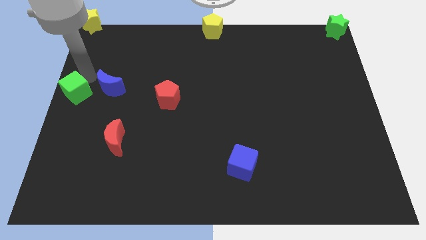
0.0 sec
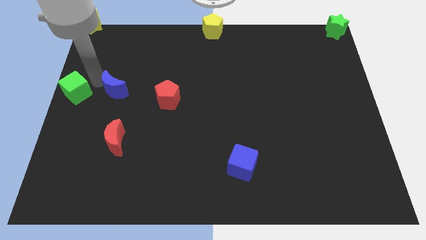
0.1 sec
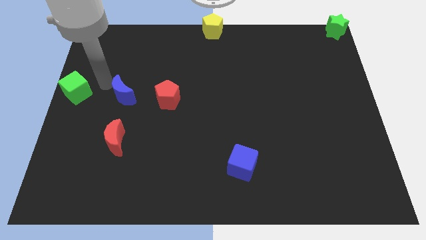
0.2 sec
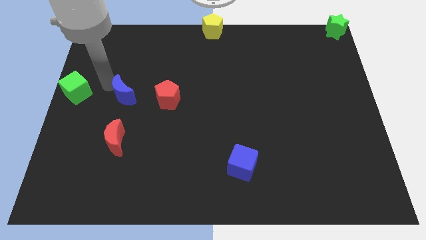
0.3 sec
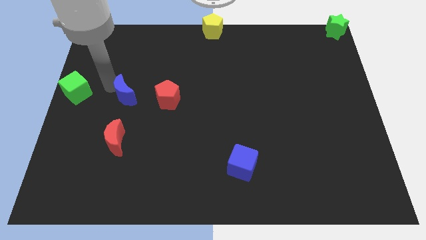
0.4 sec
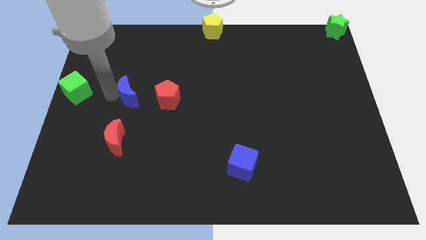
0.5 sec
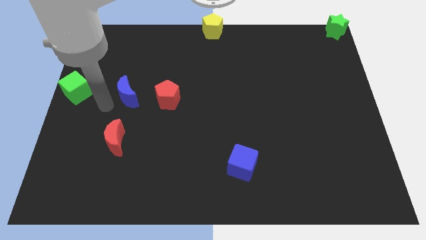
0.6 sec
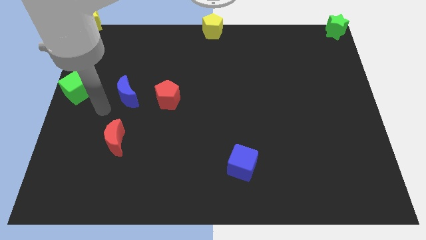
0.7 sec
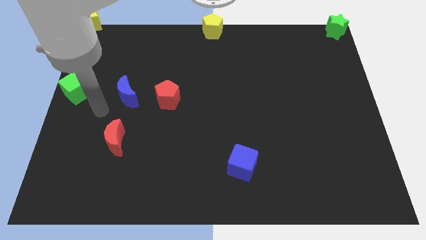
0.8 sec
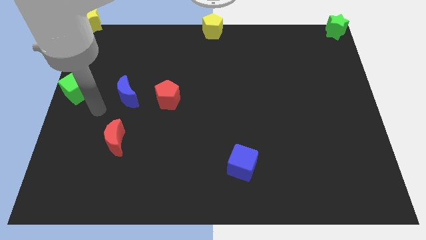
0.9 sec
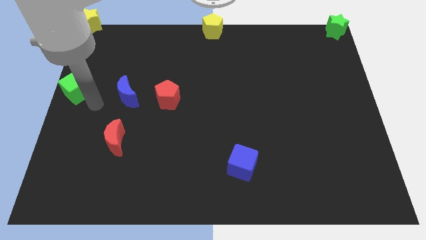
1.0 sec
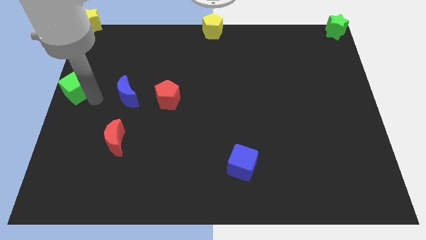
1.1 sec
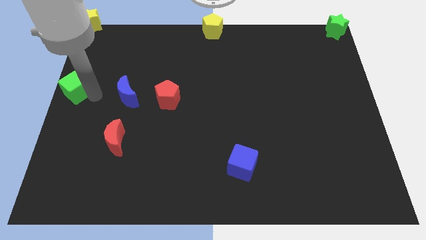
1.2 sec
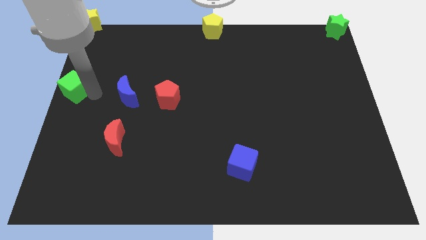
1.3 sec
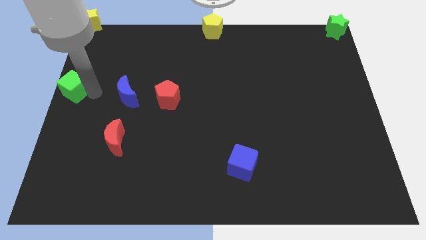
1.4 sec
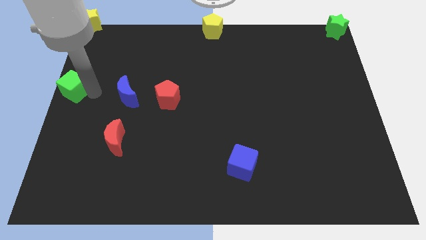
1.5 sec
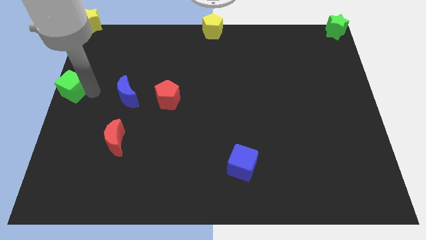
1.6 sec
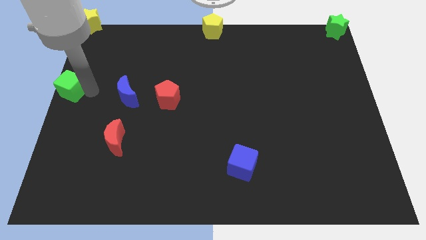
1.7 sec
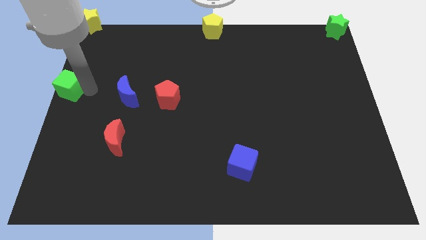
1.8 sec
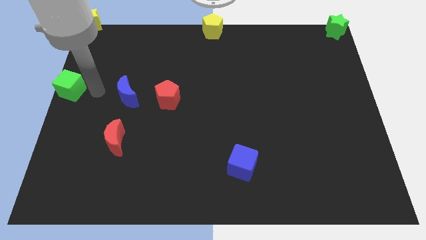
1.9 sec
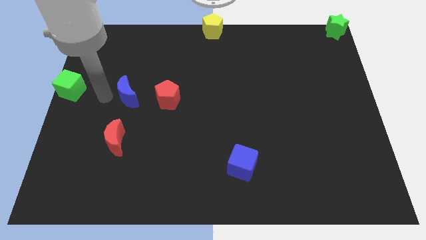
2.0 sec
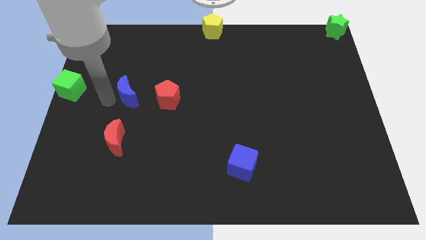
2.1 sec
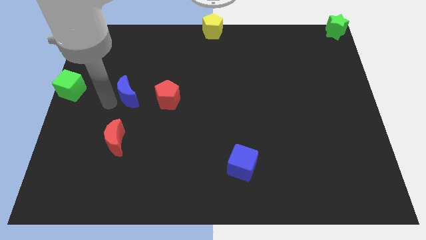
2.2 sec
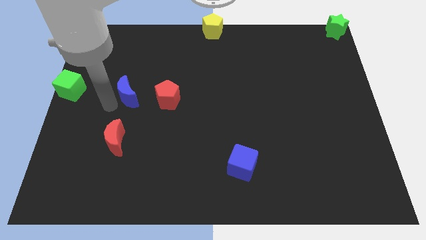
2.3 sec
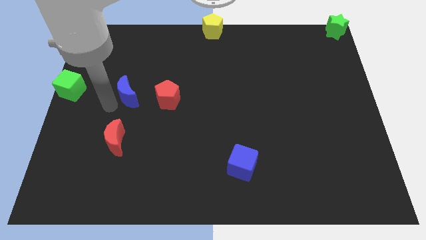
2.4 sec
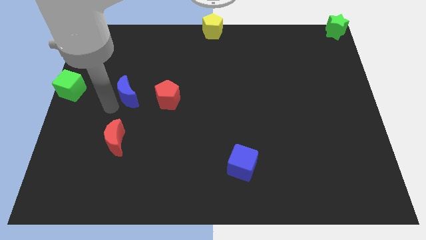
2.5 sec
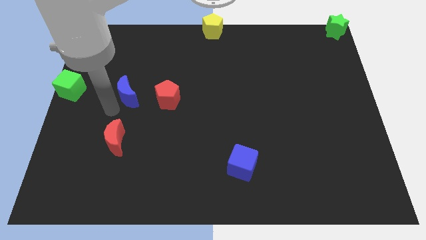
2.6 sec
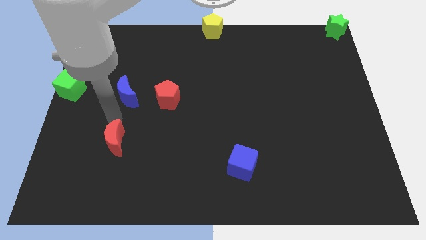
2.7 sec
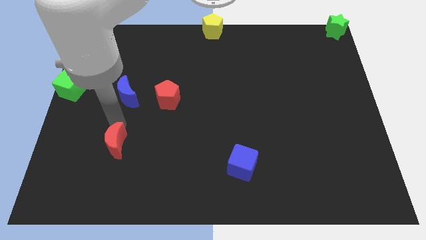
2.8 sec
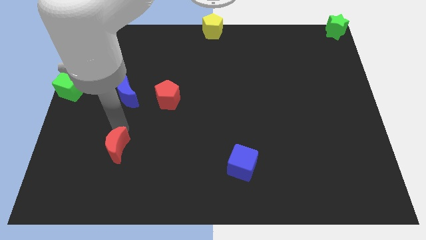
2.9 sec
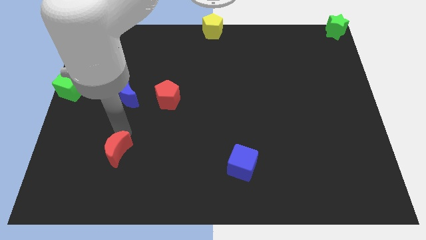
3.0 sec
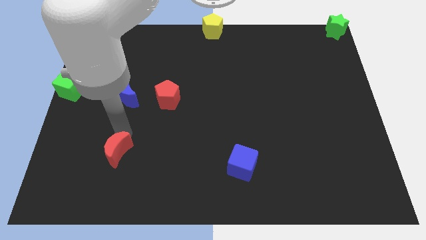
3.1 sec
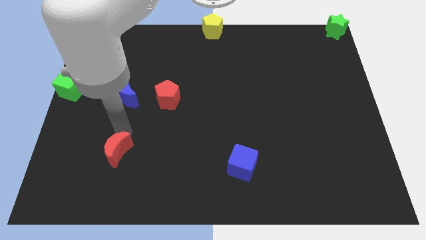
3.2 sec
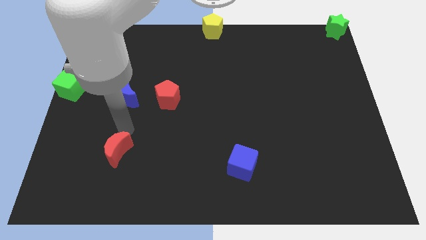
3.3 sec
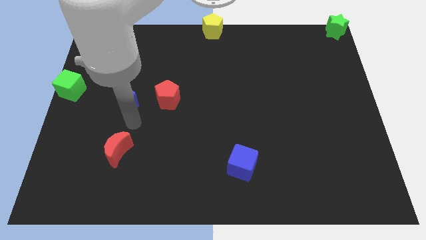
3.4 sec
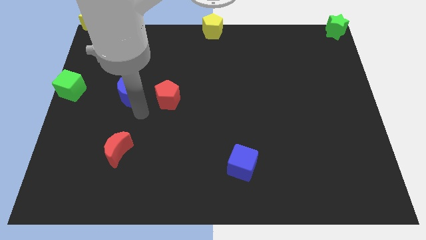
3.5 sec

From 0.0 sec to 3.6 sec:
slightly push the red moon down

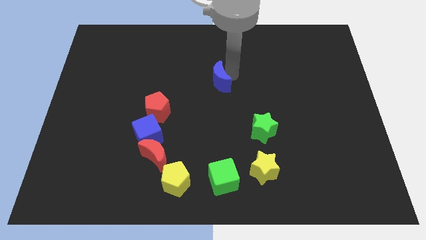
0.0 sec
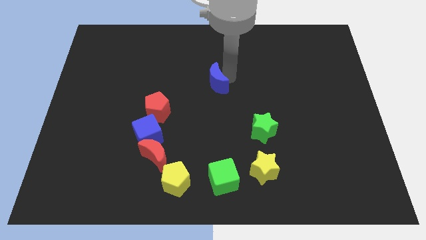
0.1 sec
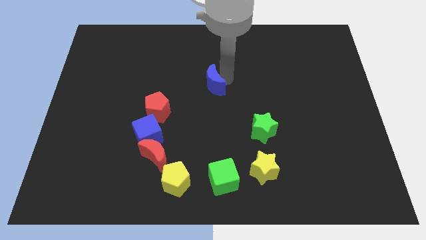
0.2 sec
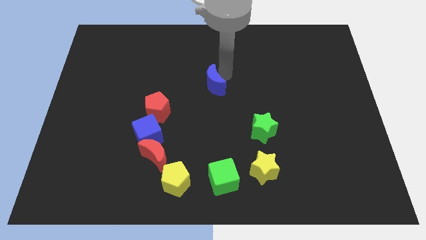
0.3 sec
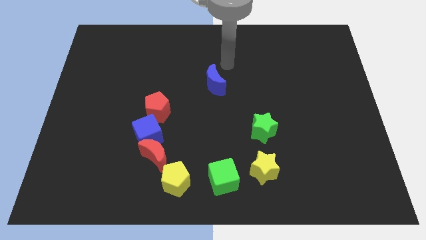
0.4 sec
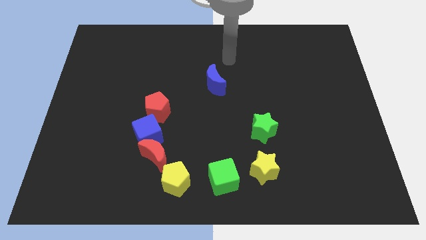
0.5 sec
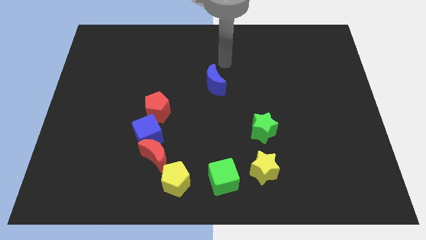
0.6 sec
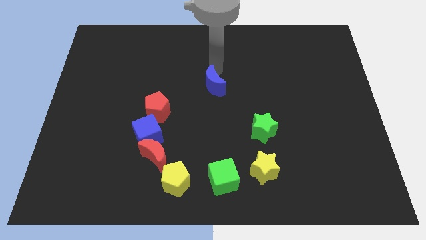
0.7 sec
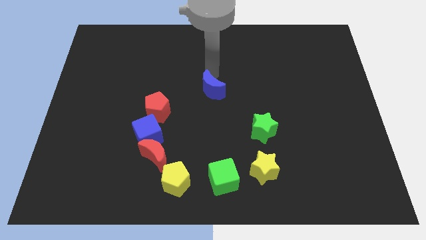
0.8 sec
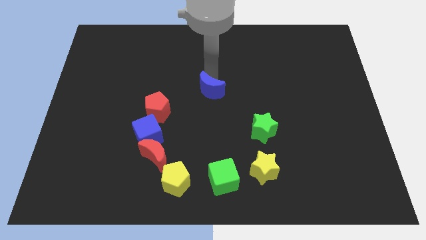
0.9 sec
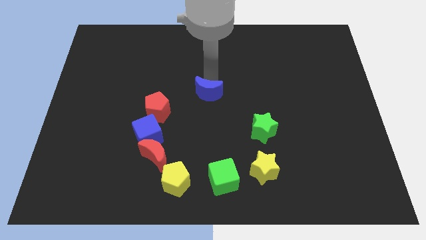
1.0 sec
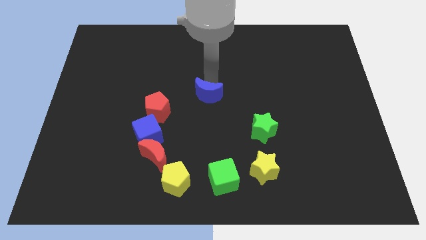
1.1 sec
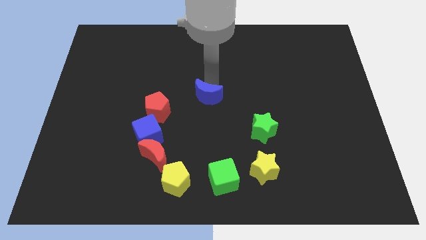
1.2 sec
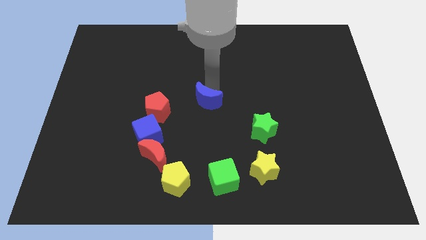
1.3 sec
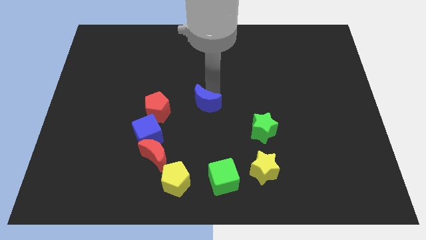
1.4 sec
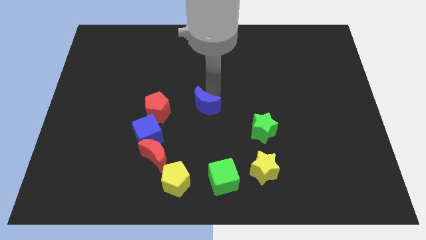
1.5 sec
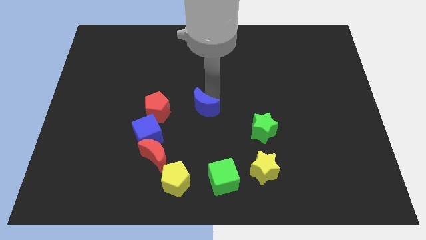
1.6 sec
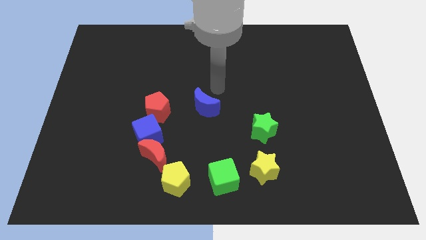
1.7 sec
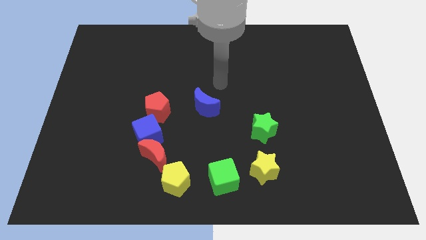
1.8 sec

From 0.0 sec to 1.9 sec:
move the blue moon to the right of the red pentagon

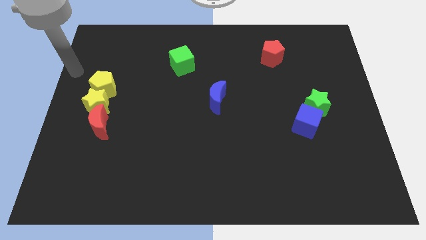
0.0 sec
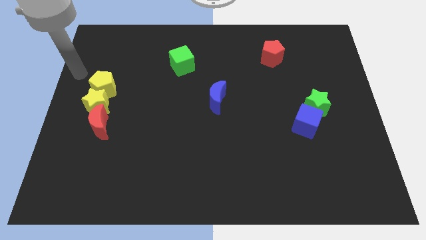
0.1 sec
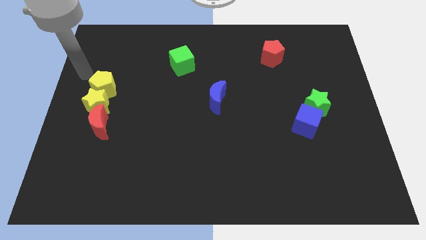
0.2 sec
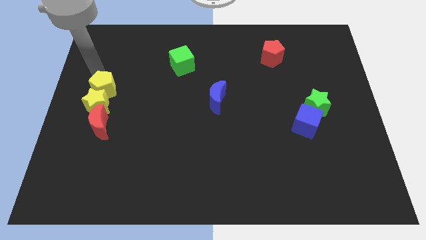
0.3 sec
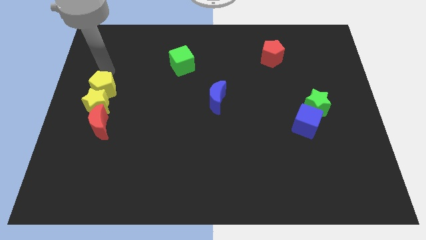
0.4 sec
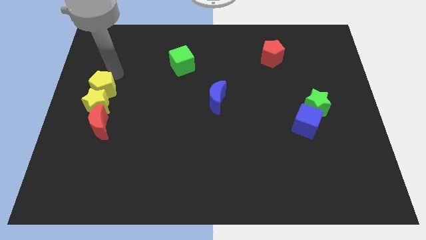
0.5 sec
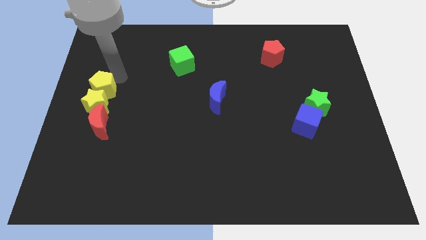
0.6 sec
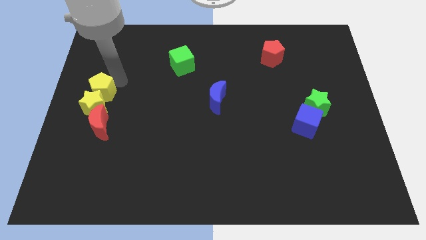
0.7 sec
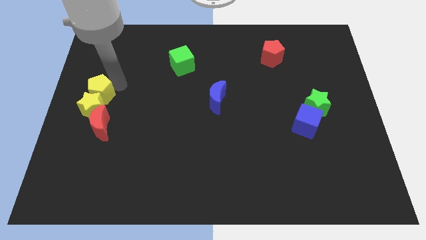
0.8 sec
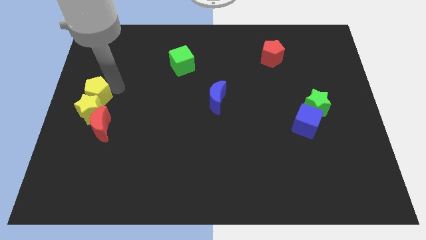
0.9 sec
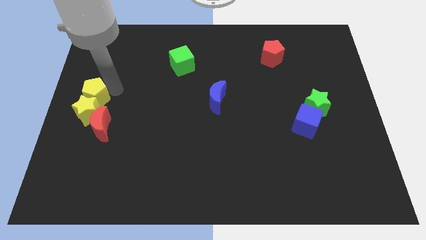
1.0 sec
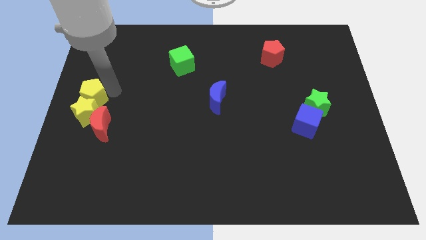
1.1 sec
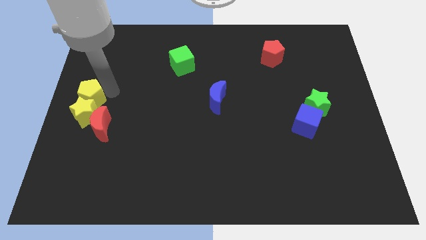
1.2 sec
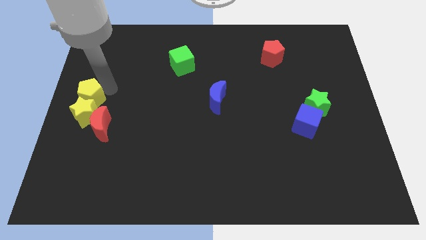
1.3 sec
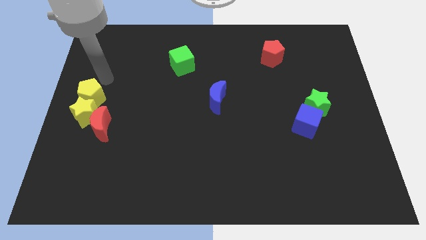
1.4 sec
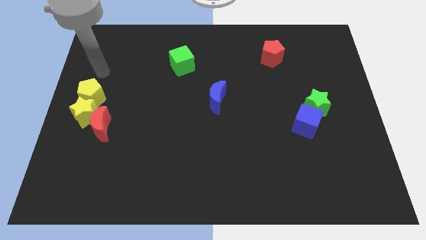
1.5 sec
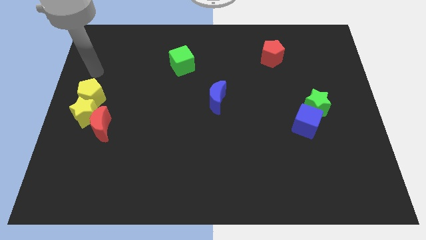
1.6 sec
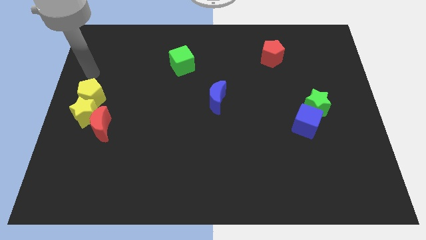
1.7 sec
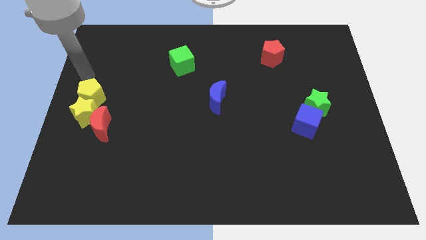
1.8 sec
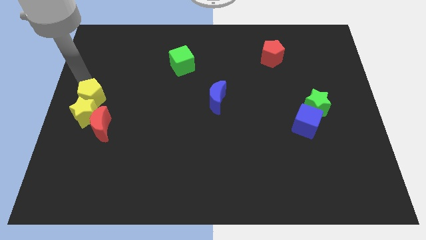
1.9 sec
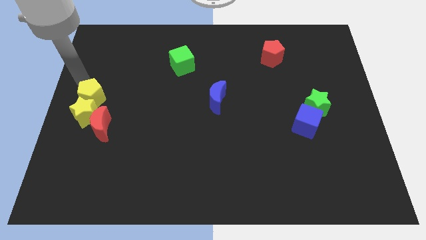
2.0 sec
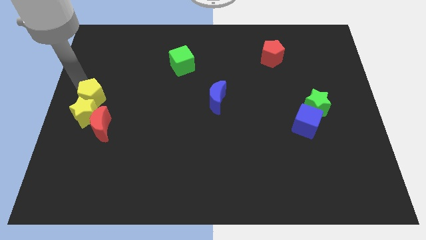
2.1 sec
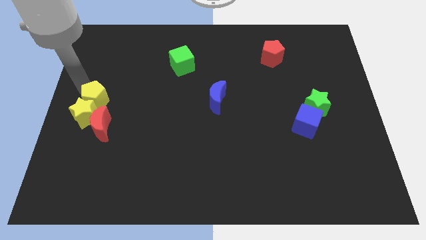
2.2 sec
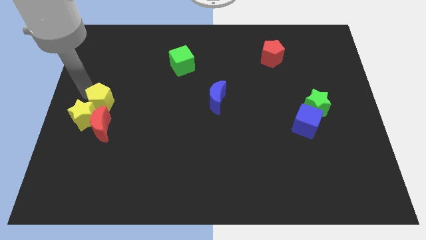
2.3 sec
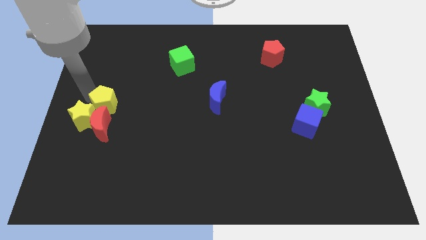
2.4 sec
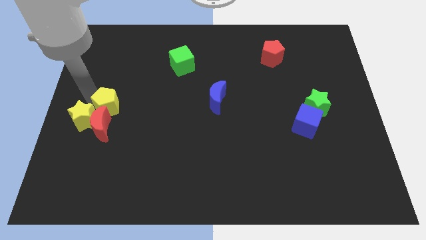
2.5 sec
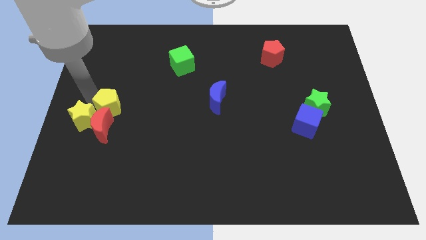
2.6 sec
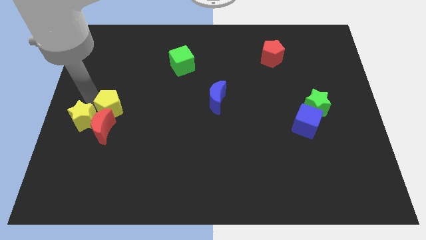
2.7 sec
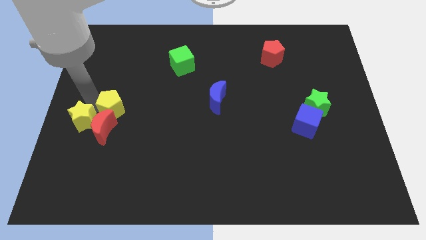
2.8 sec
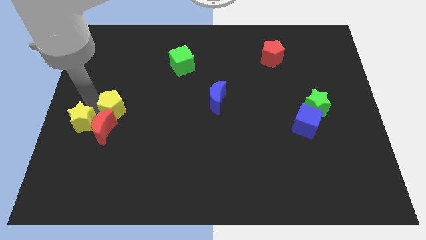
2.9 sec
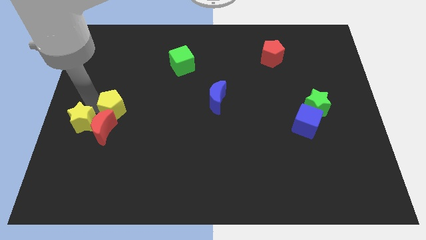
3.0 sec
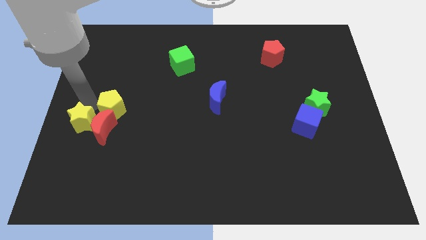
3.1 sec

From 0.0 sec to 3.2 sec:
move the yellow pentagon into the yellow star

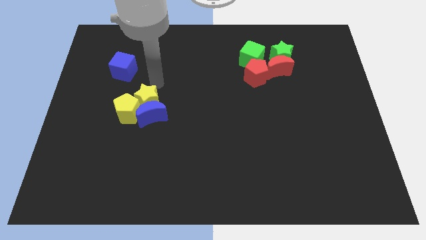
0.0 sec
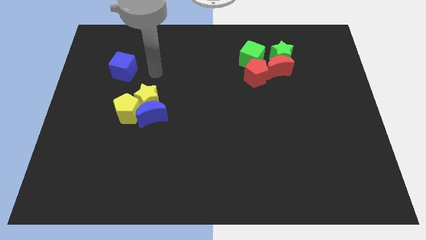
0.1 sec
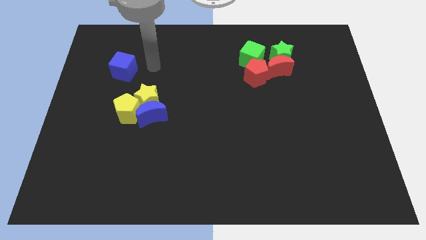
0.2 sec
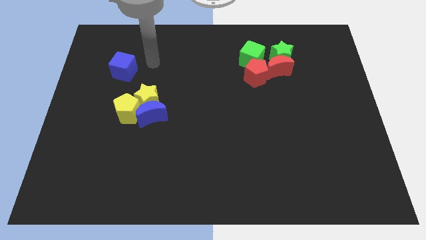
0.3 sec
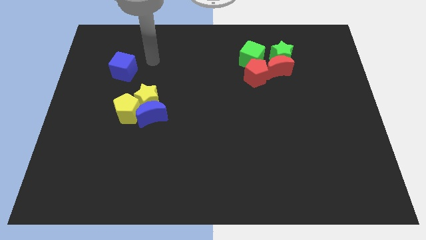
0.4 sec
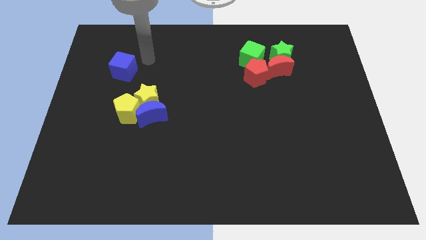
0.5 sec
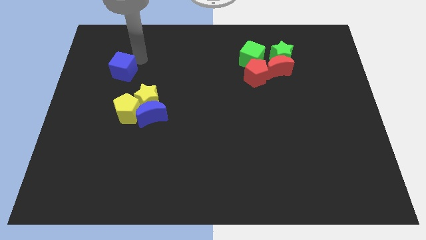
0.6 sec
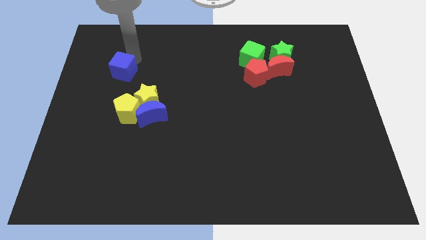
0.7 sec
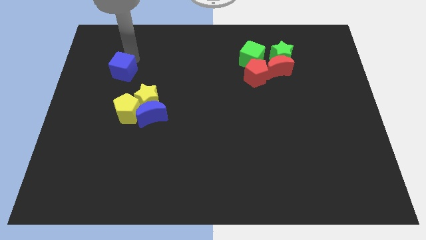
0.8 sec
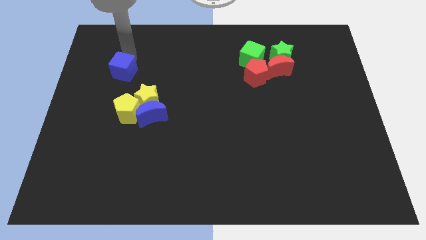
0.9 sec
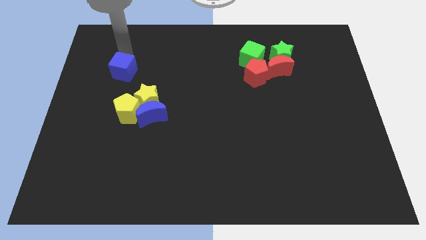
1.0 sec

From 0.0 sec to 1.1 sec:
move the arm to the top of the blue cube
